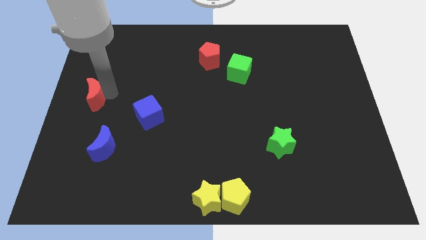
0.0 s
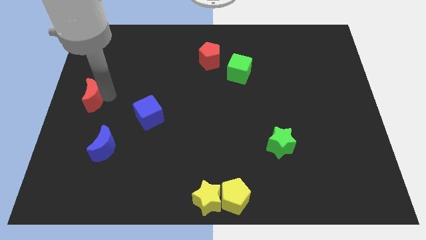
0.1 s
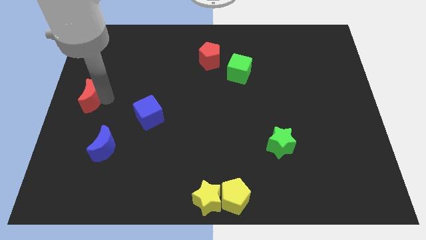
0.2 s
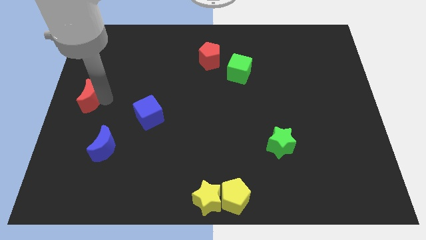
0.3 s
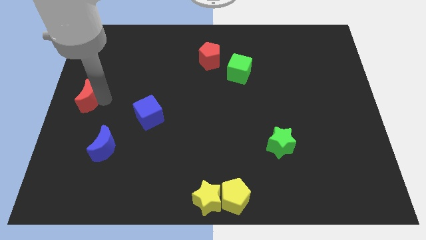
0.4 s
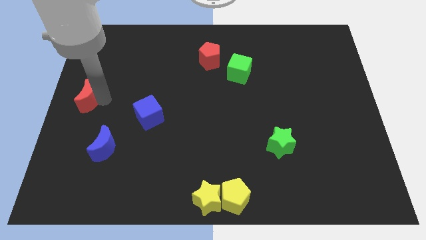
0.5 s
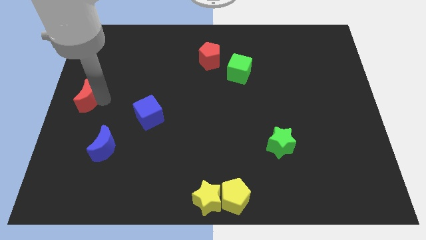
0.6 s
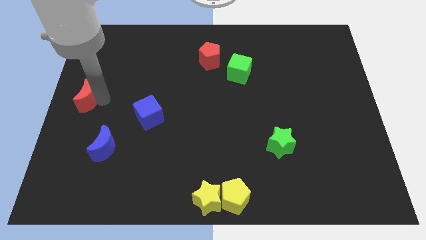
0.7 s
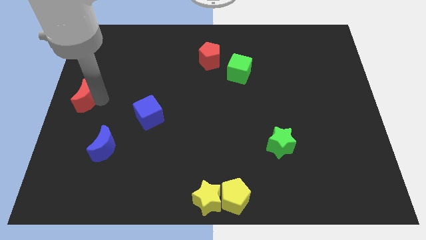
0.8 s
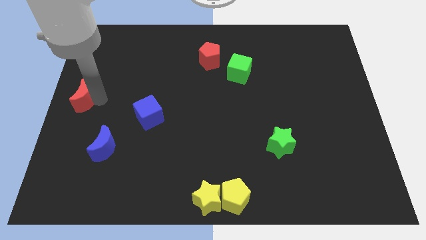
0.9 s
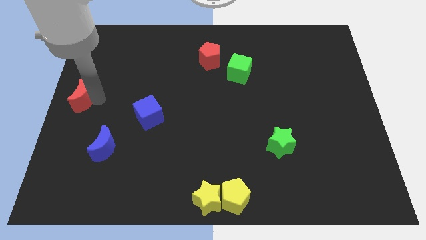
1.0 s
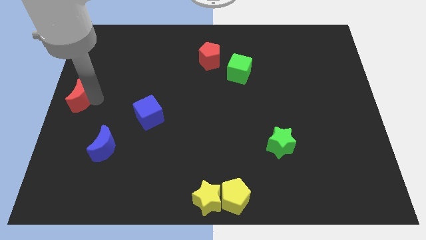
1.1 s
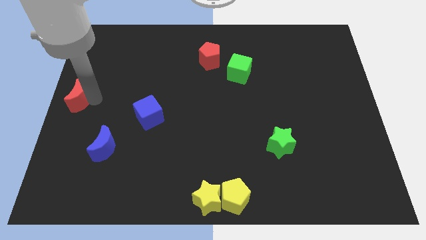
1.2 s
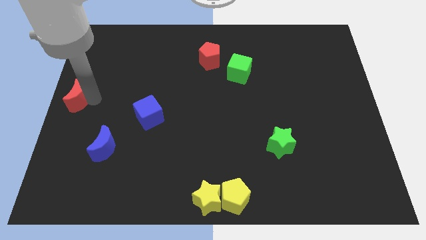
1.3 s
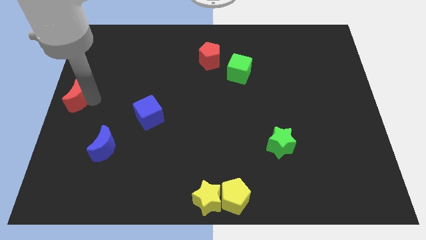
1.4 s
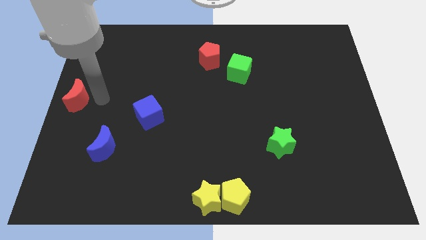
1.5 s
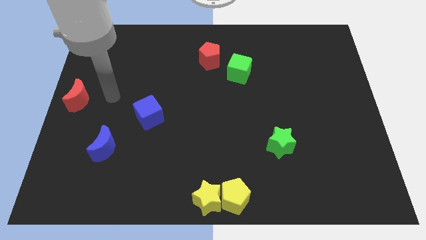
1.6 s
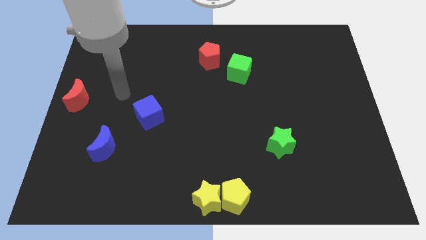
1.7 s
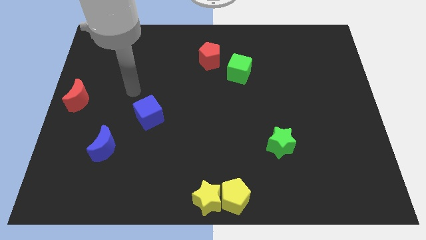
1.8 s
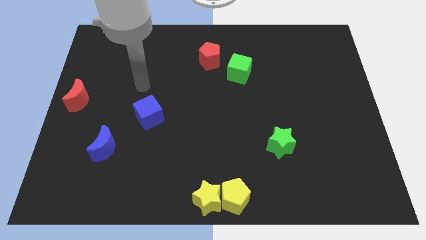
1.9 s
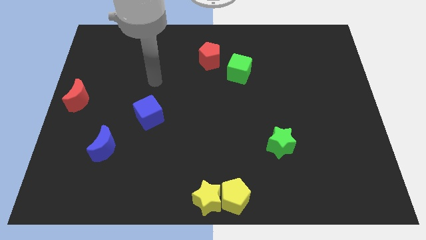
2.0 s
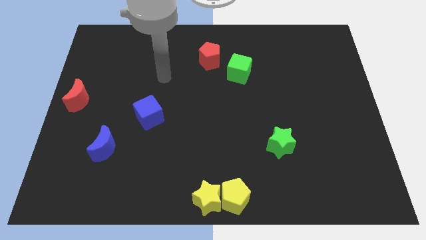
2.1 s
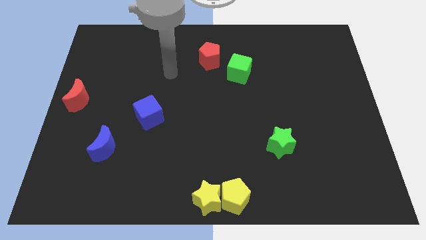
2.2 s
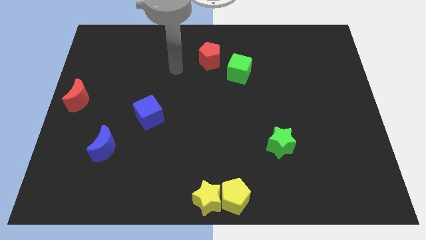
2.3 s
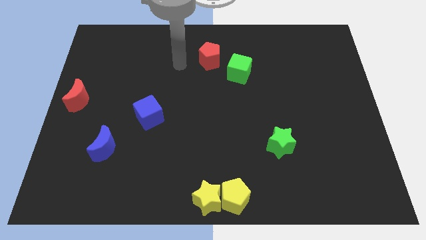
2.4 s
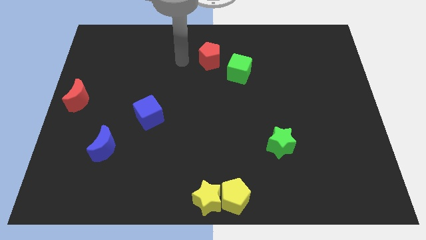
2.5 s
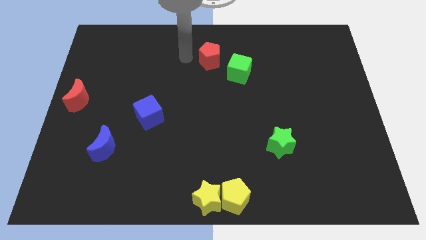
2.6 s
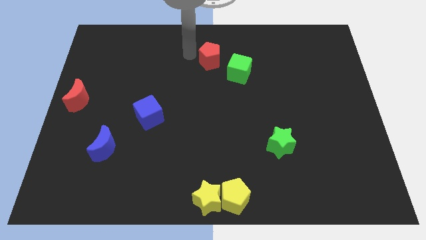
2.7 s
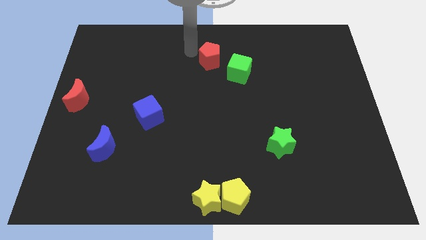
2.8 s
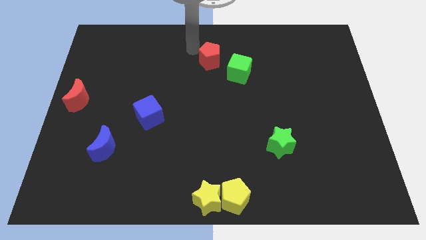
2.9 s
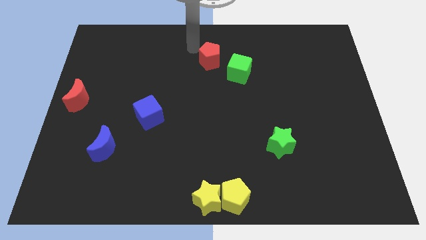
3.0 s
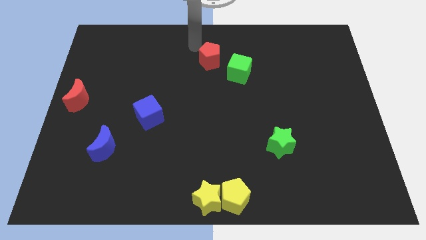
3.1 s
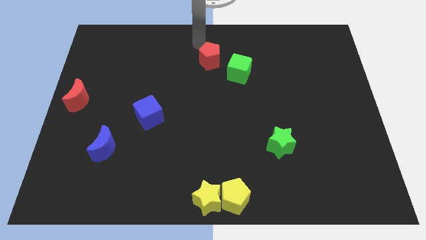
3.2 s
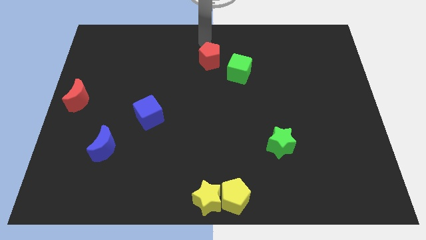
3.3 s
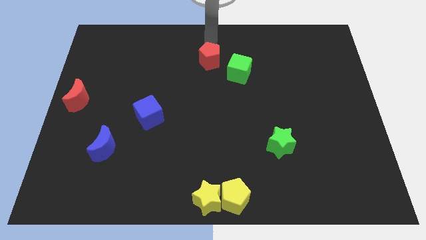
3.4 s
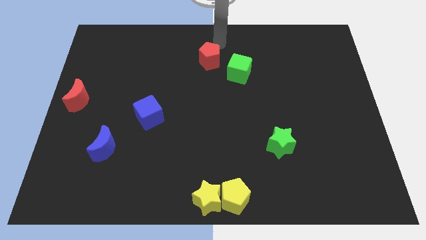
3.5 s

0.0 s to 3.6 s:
put the red moon to the center left side of the board

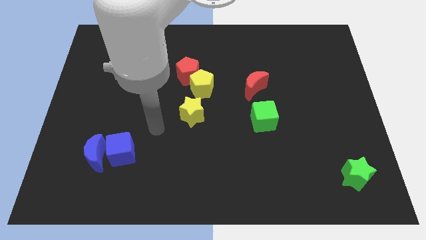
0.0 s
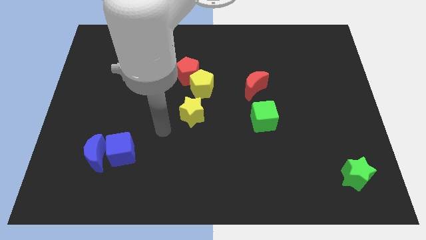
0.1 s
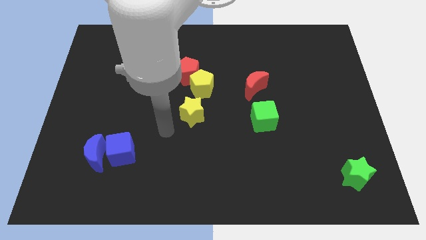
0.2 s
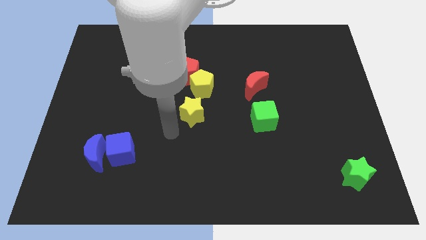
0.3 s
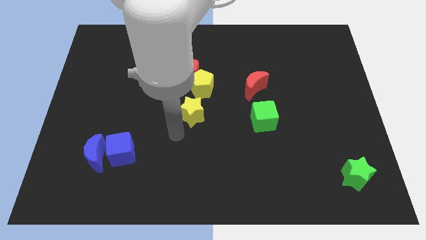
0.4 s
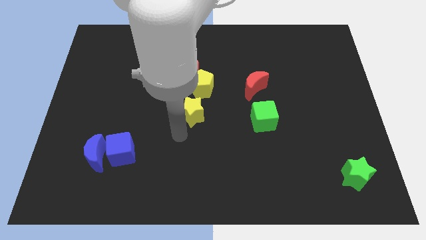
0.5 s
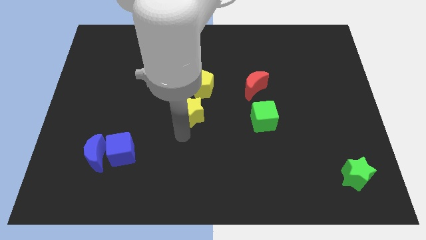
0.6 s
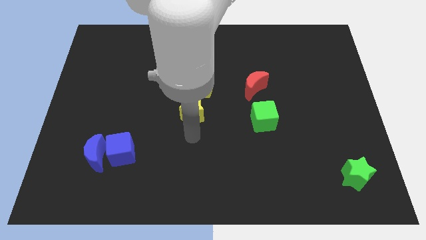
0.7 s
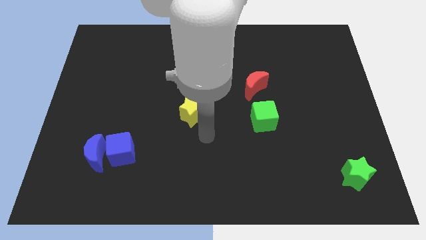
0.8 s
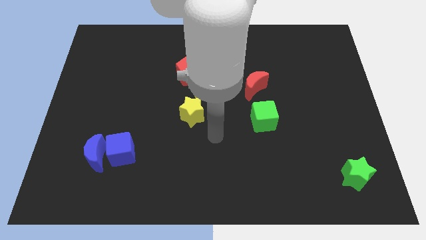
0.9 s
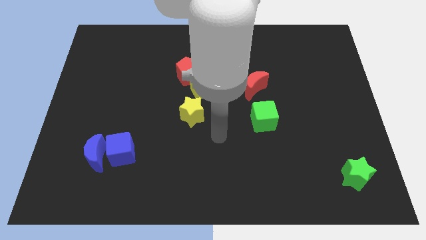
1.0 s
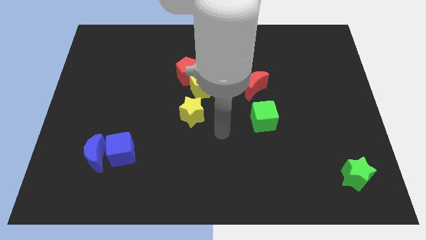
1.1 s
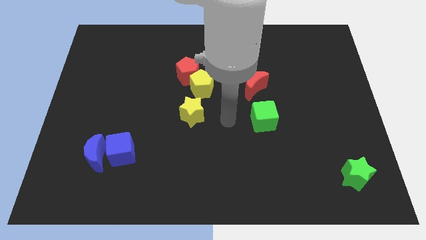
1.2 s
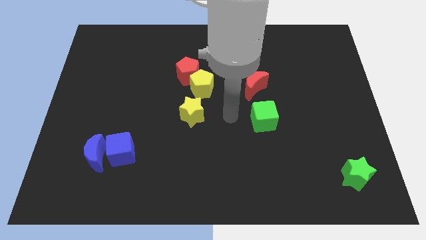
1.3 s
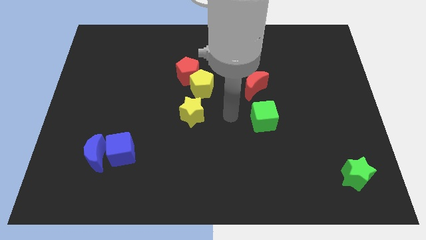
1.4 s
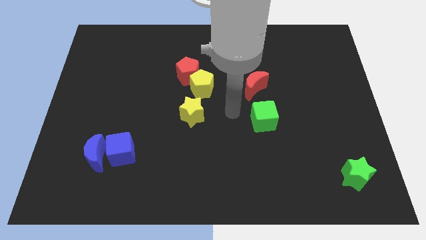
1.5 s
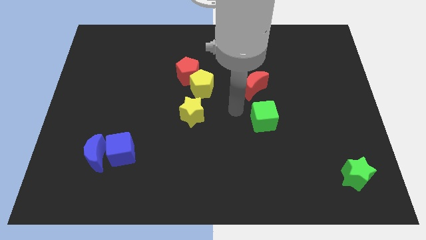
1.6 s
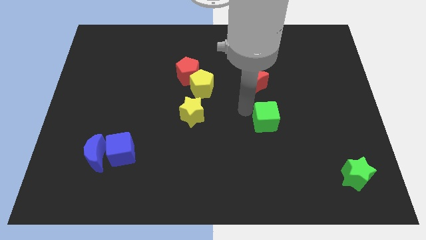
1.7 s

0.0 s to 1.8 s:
move your arm to the left of the green cube

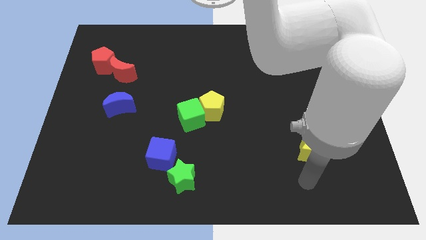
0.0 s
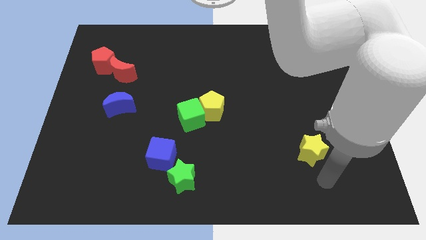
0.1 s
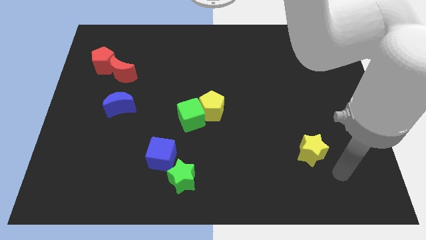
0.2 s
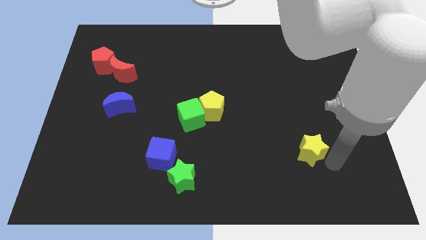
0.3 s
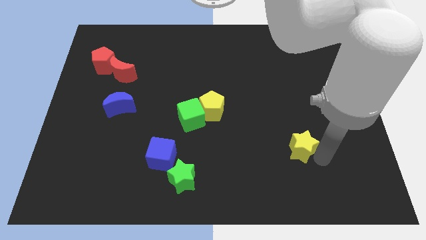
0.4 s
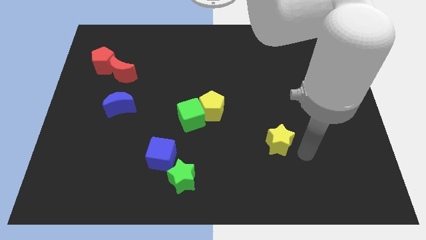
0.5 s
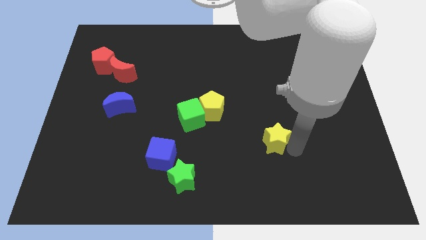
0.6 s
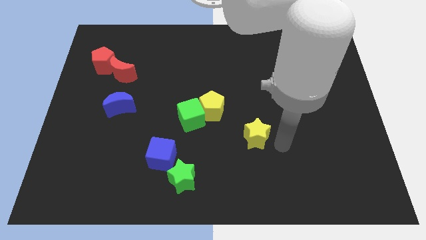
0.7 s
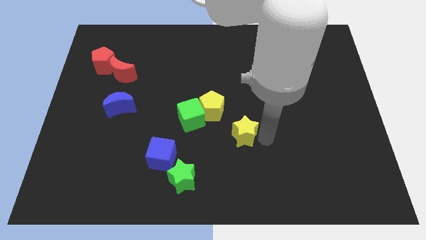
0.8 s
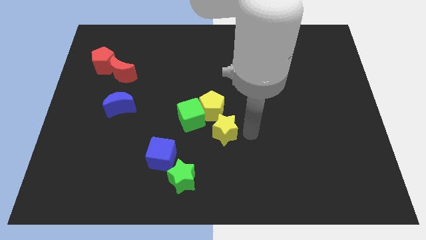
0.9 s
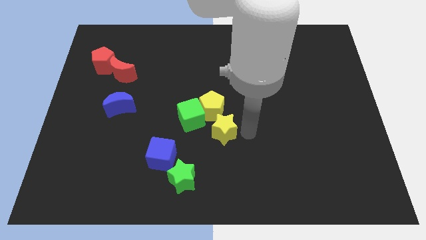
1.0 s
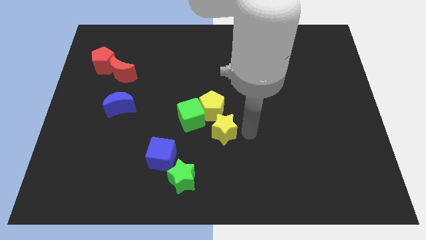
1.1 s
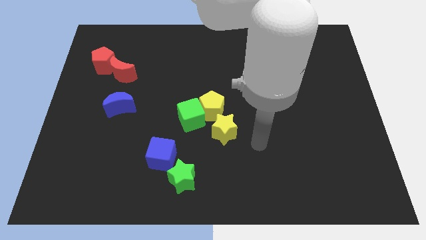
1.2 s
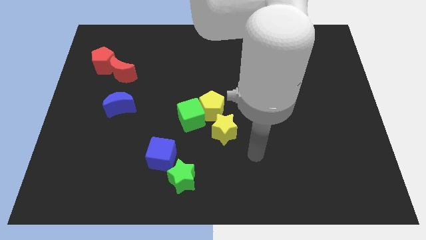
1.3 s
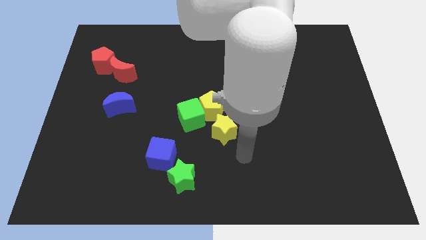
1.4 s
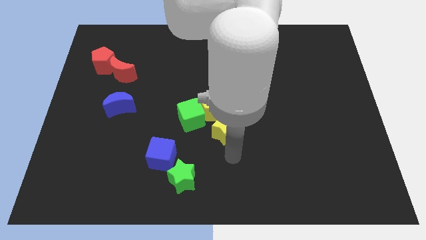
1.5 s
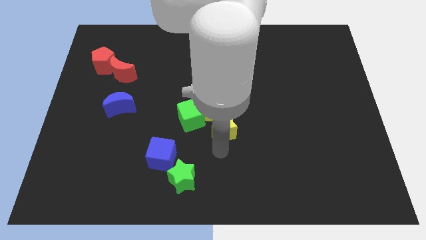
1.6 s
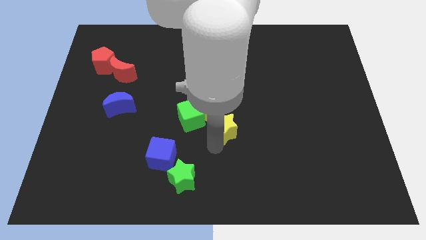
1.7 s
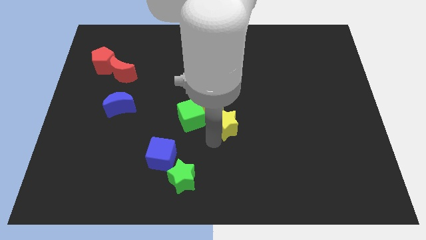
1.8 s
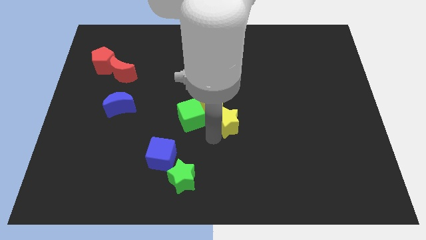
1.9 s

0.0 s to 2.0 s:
move the yellow star into the yellow pentagon

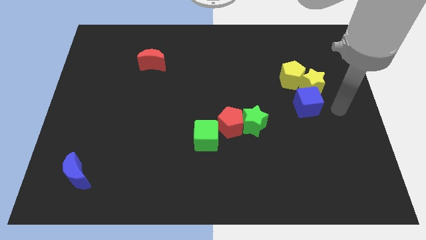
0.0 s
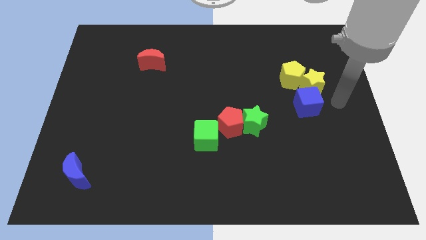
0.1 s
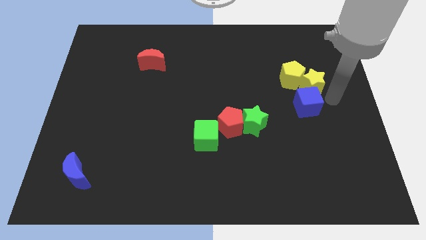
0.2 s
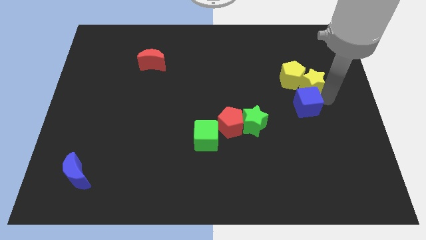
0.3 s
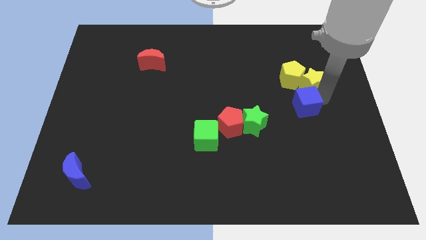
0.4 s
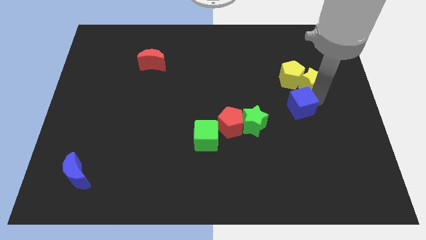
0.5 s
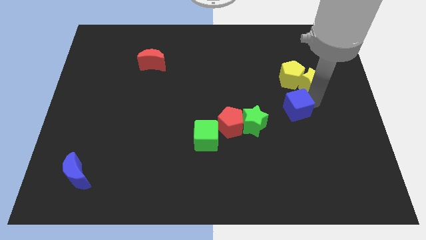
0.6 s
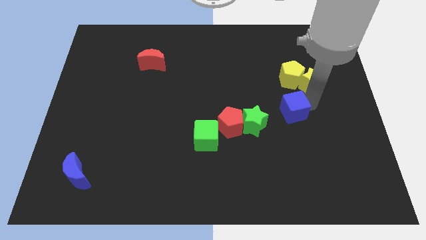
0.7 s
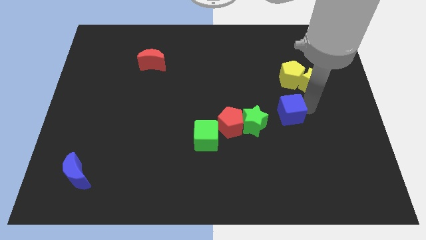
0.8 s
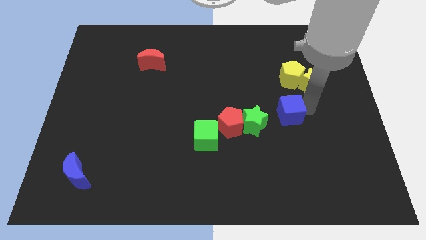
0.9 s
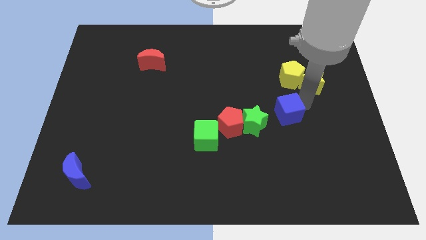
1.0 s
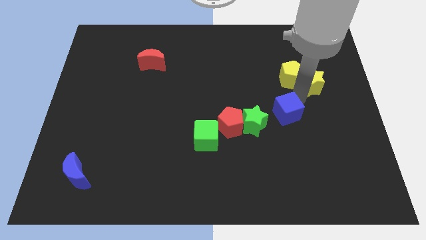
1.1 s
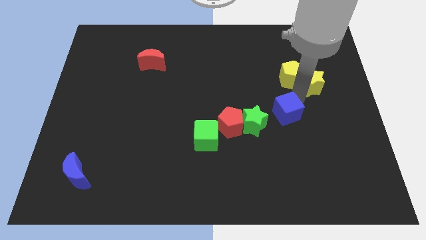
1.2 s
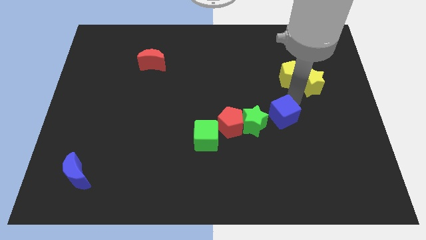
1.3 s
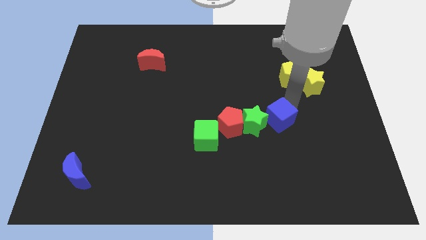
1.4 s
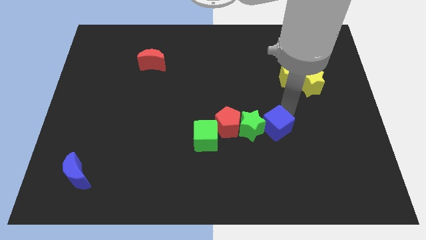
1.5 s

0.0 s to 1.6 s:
push the blue moon to the right side of green star
